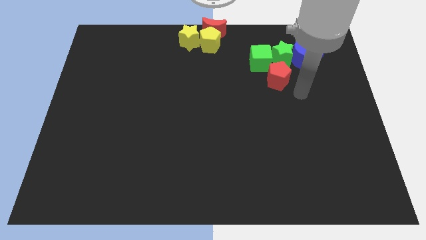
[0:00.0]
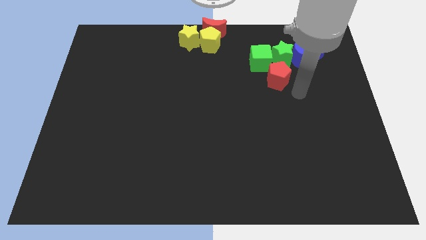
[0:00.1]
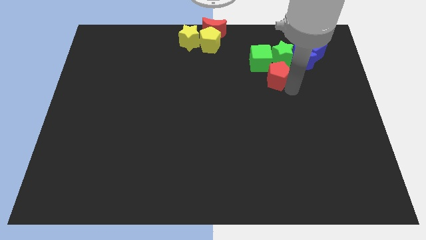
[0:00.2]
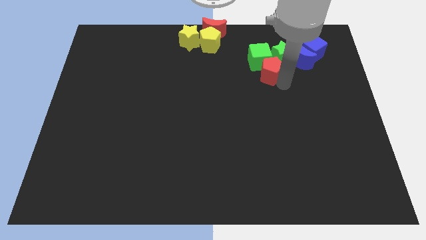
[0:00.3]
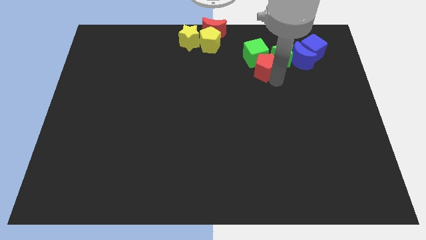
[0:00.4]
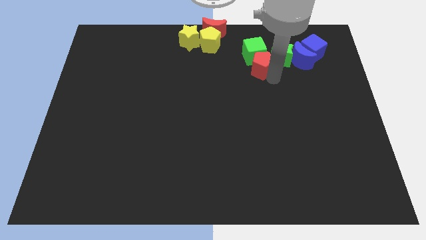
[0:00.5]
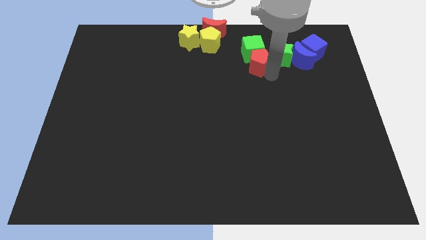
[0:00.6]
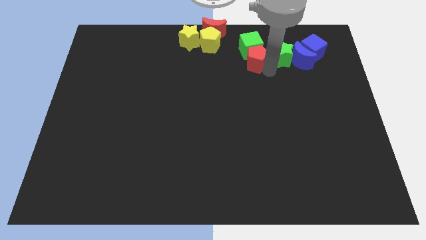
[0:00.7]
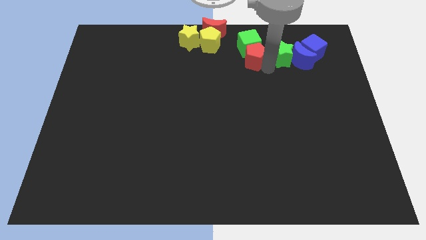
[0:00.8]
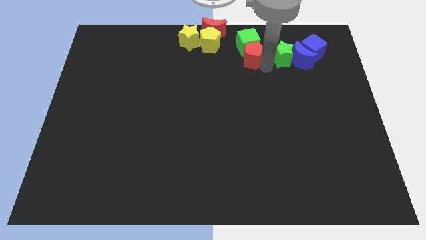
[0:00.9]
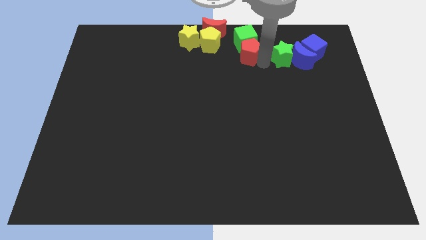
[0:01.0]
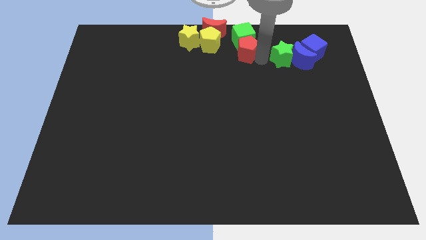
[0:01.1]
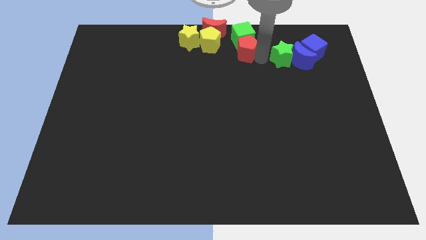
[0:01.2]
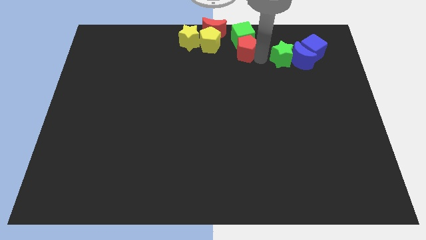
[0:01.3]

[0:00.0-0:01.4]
move the red pentagon along with the green cube towards the top center

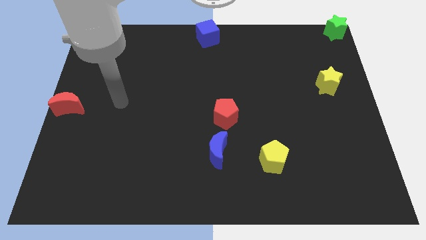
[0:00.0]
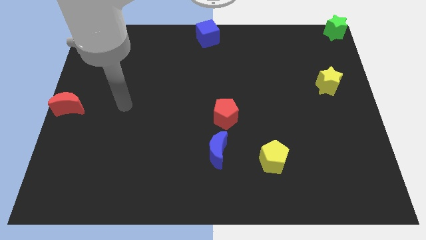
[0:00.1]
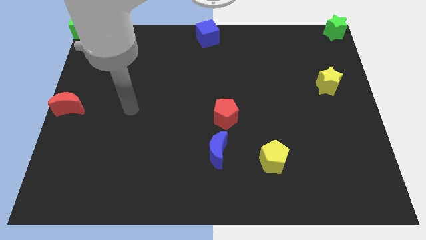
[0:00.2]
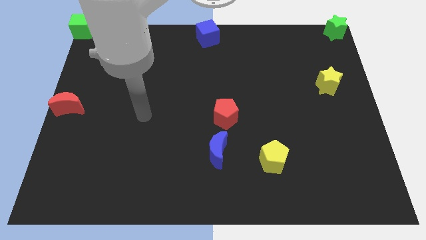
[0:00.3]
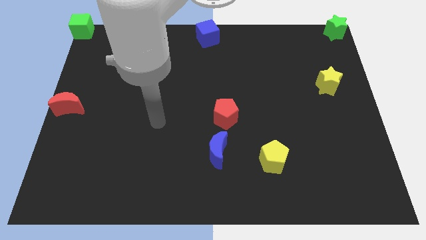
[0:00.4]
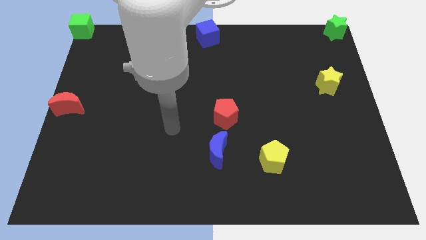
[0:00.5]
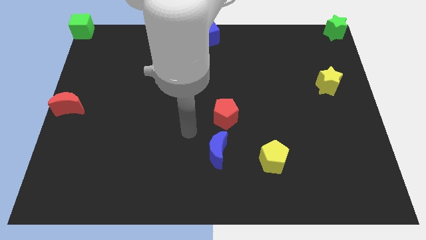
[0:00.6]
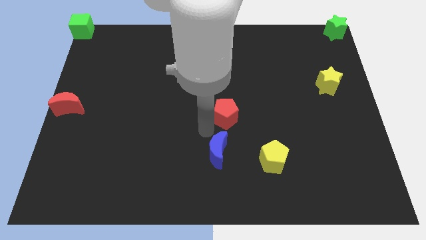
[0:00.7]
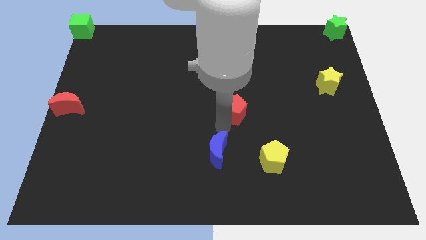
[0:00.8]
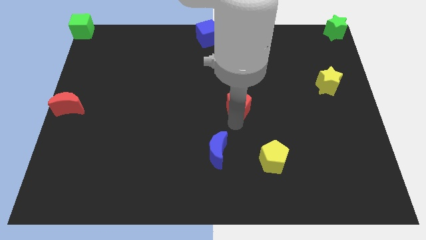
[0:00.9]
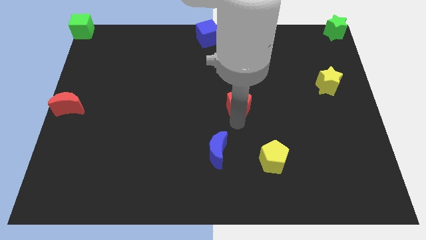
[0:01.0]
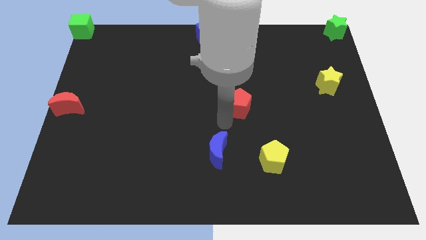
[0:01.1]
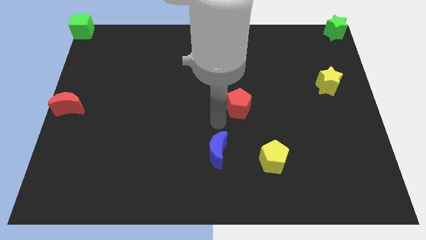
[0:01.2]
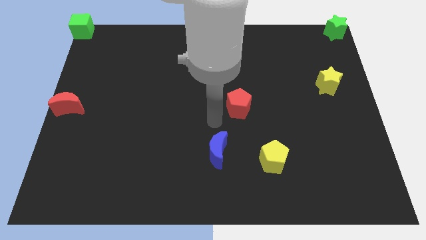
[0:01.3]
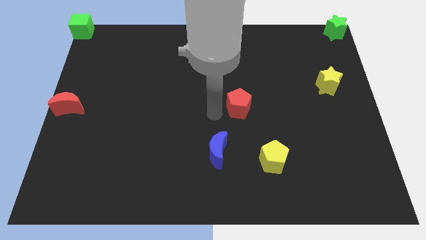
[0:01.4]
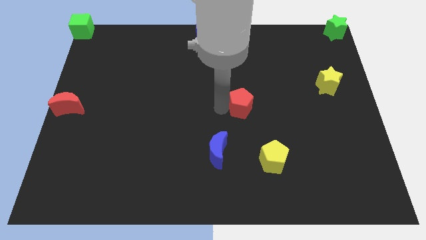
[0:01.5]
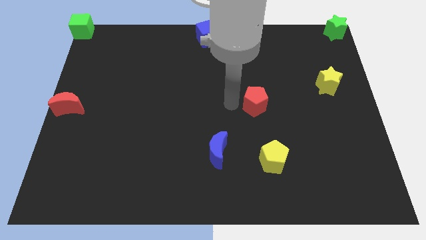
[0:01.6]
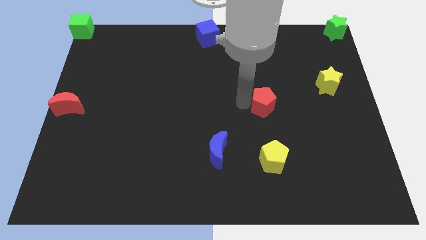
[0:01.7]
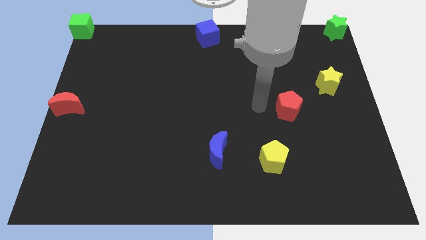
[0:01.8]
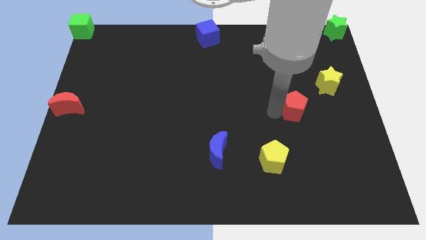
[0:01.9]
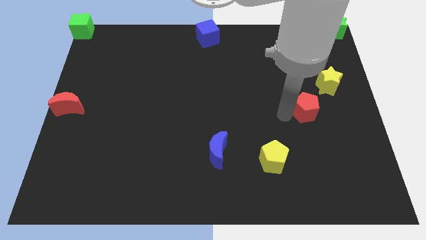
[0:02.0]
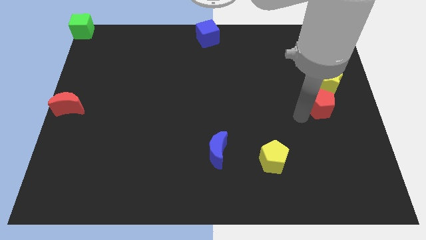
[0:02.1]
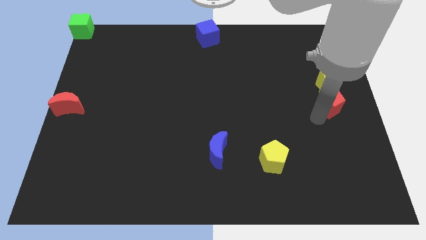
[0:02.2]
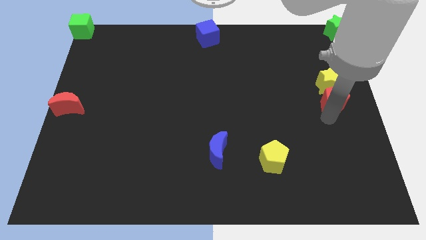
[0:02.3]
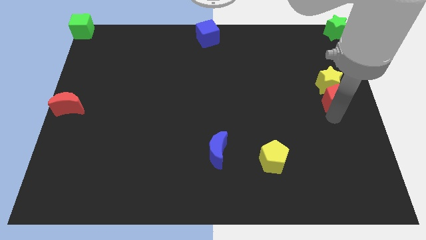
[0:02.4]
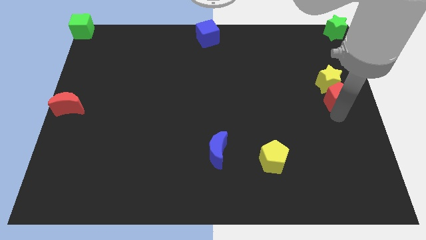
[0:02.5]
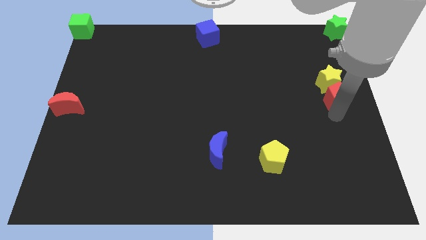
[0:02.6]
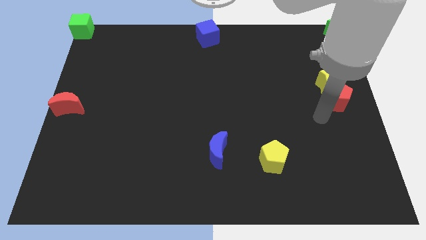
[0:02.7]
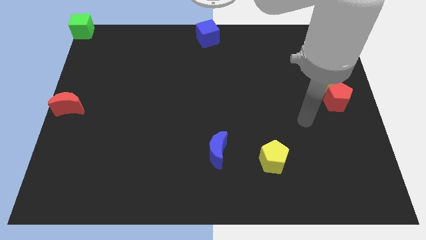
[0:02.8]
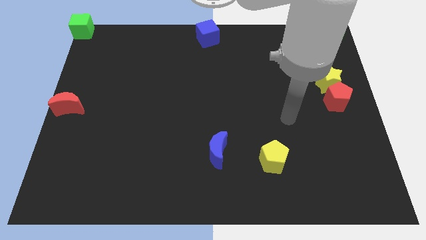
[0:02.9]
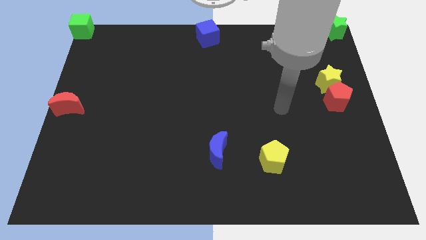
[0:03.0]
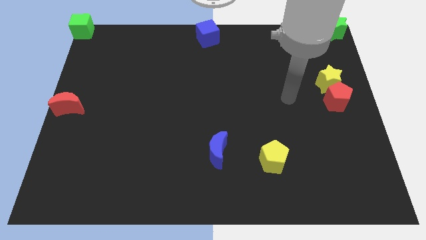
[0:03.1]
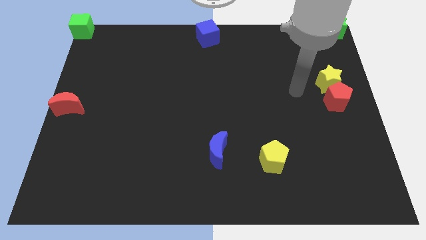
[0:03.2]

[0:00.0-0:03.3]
move the red pentagon away from the blue moon

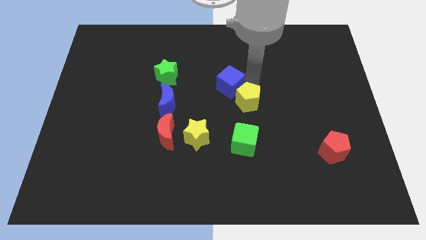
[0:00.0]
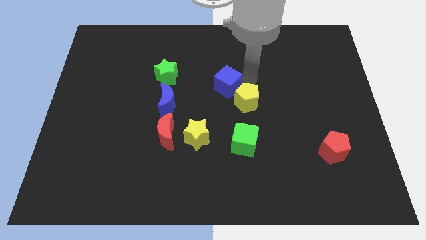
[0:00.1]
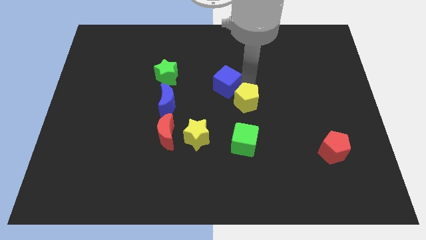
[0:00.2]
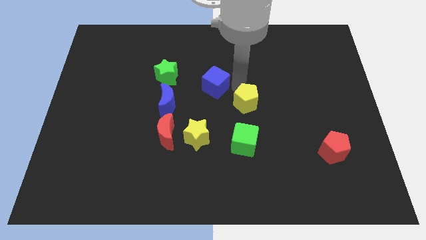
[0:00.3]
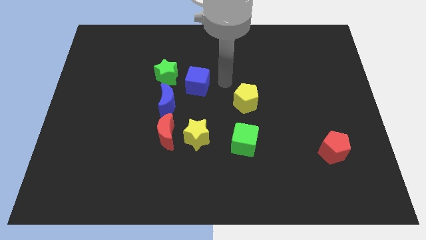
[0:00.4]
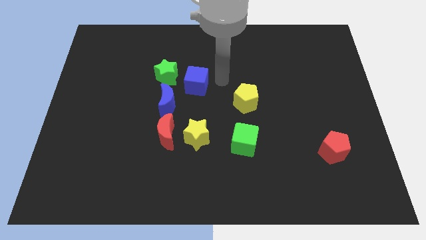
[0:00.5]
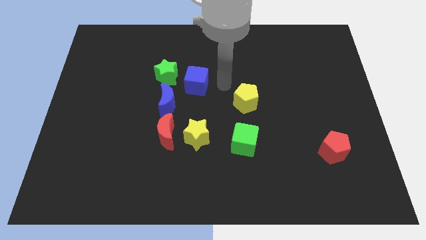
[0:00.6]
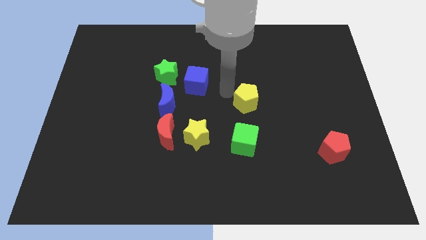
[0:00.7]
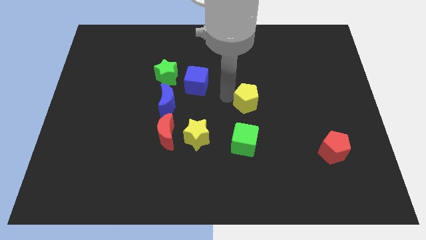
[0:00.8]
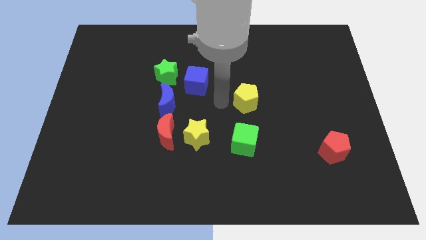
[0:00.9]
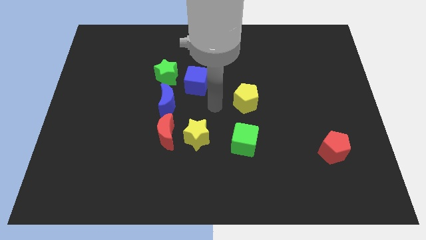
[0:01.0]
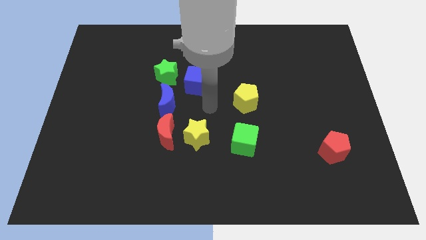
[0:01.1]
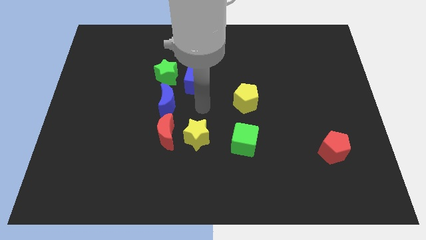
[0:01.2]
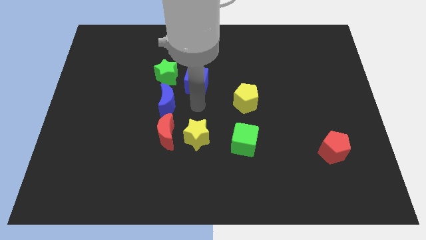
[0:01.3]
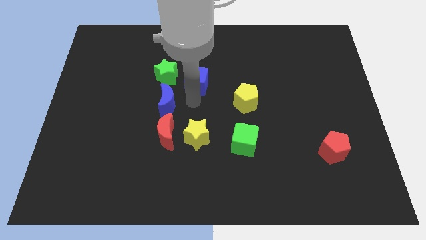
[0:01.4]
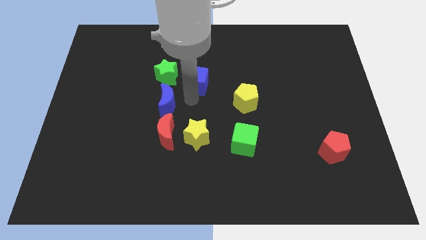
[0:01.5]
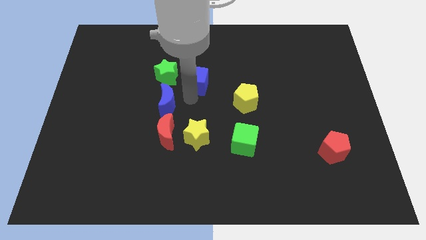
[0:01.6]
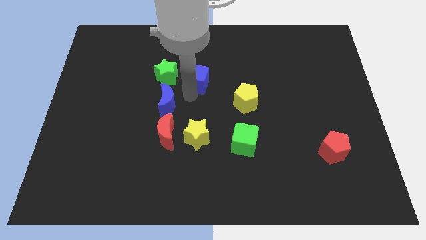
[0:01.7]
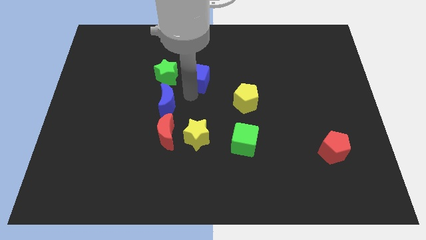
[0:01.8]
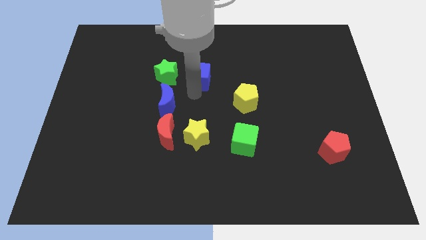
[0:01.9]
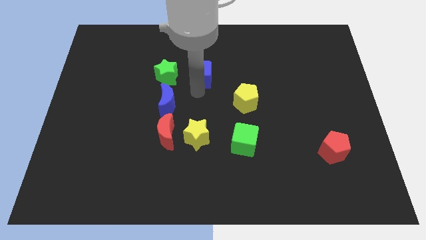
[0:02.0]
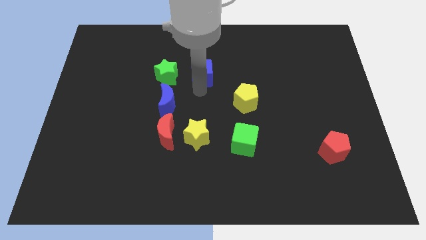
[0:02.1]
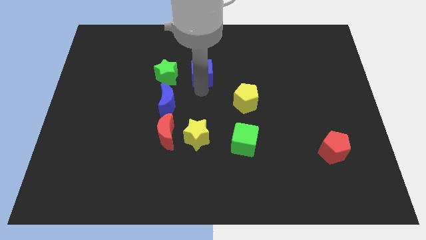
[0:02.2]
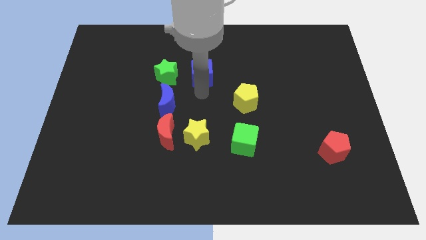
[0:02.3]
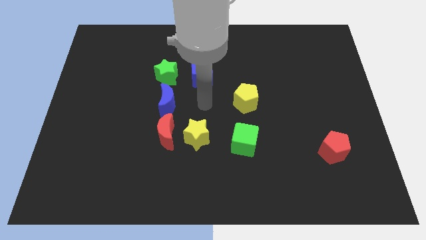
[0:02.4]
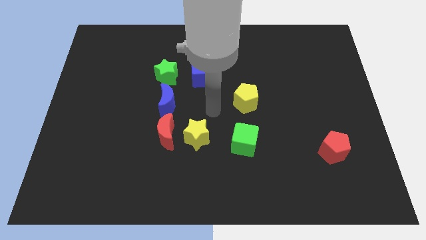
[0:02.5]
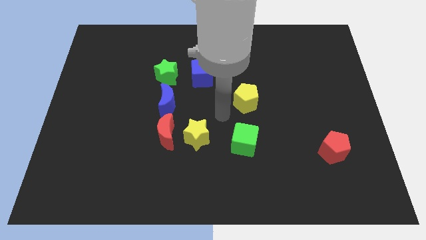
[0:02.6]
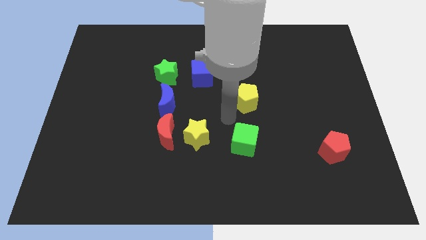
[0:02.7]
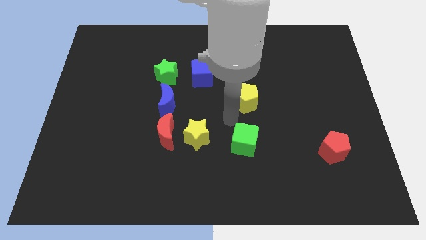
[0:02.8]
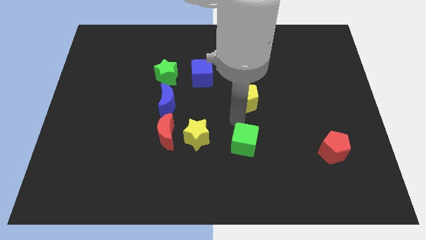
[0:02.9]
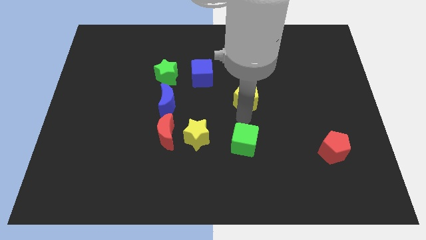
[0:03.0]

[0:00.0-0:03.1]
move the blue cube right to the green star

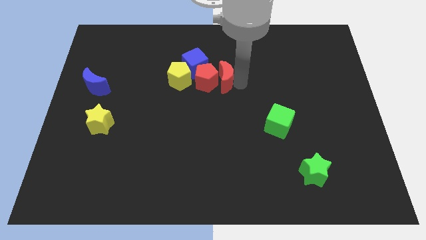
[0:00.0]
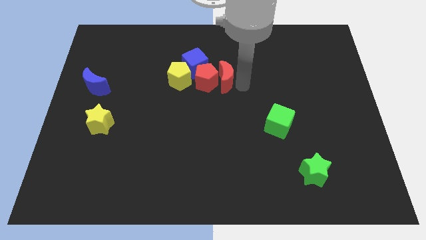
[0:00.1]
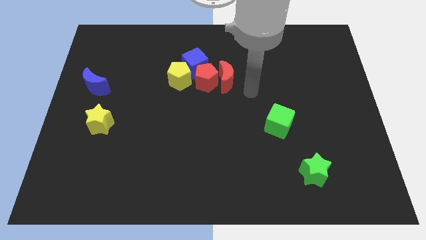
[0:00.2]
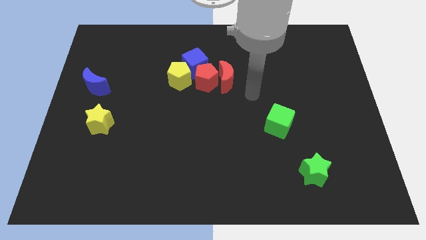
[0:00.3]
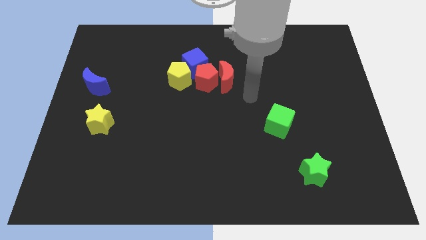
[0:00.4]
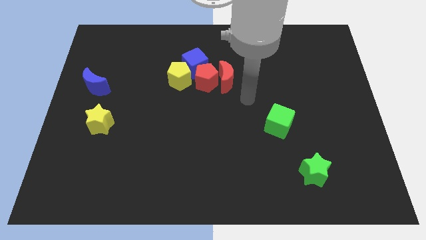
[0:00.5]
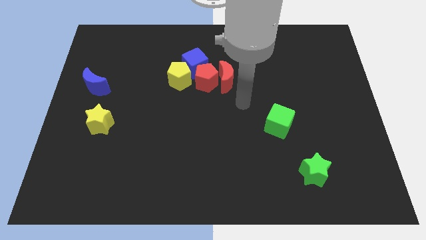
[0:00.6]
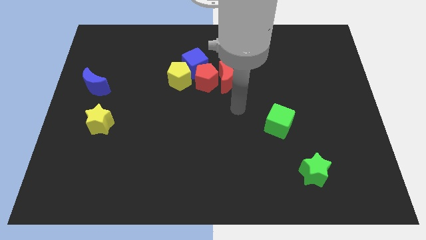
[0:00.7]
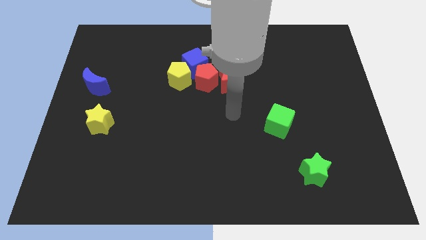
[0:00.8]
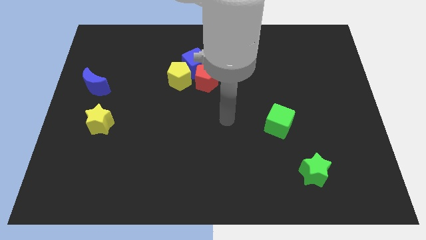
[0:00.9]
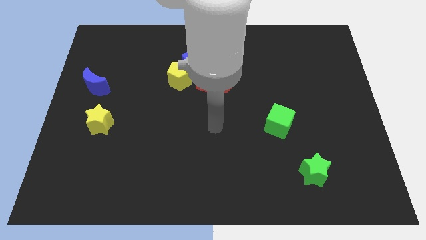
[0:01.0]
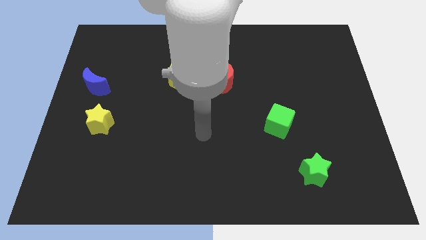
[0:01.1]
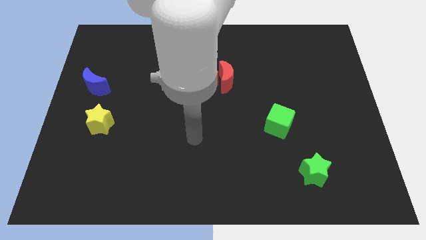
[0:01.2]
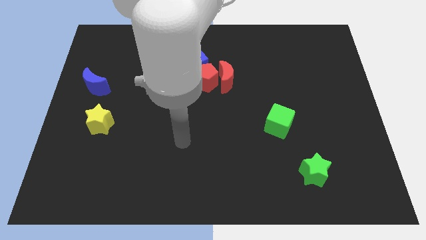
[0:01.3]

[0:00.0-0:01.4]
move your arm towards the bottom side of the board
